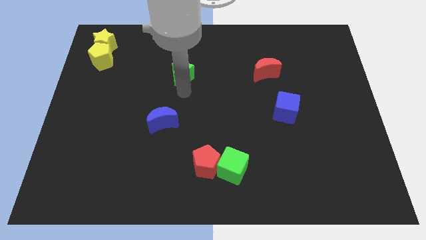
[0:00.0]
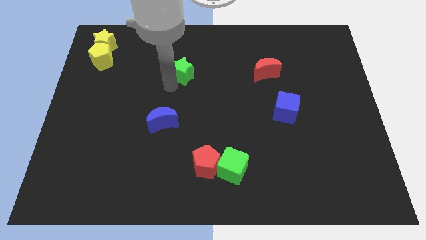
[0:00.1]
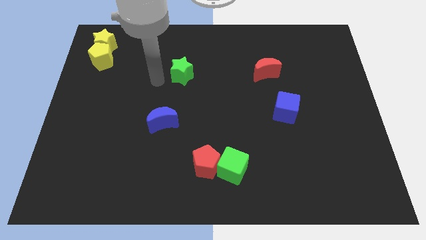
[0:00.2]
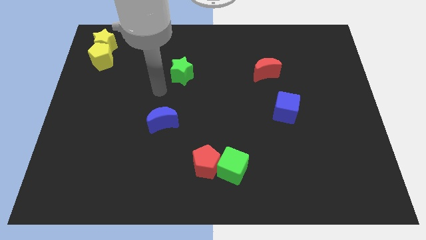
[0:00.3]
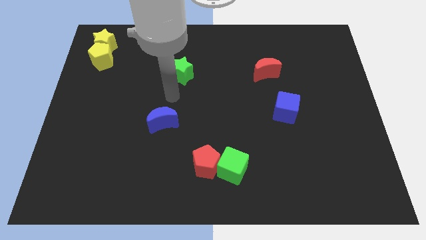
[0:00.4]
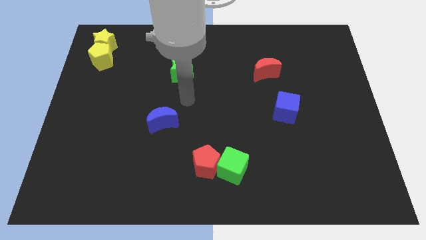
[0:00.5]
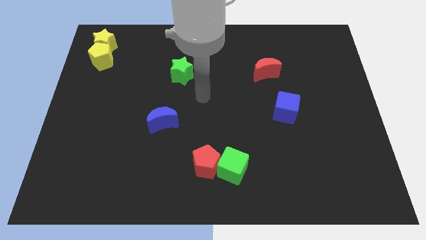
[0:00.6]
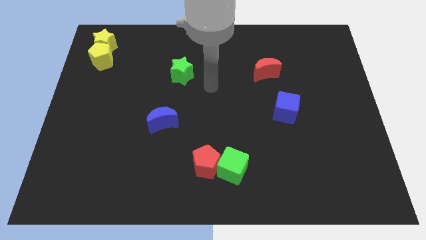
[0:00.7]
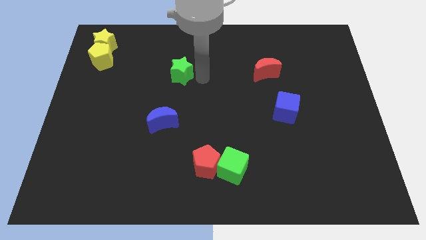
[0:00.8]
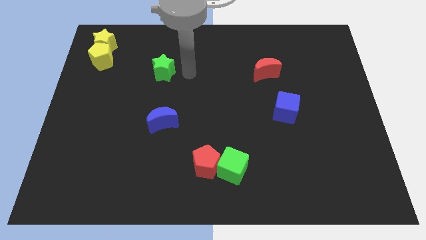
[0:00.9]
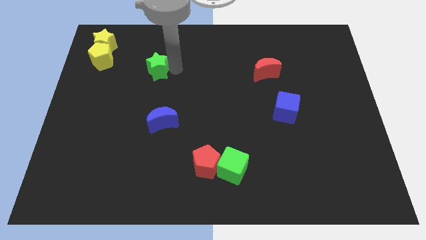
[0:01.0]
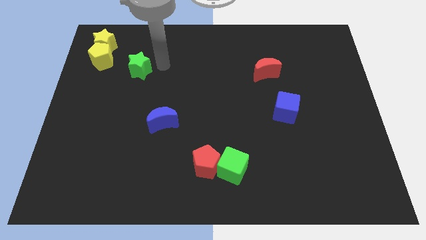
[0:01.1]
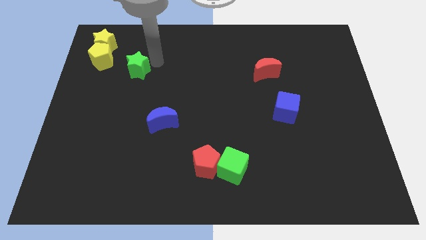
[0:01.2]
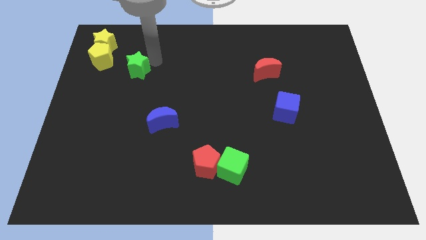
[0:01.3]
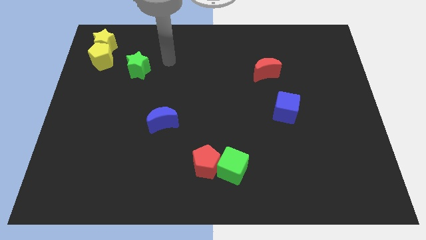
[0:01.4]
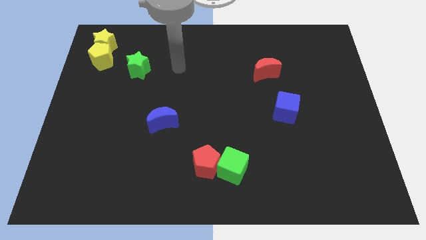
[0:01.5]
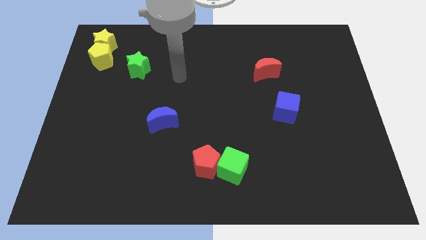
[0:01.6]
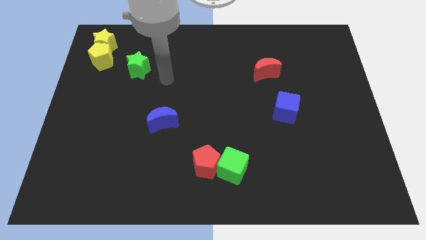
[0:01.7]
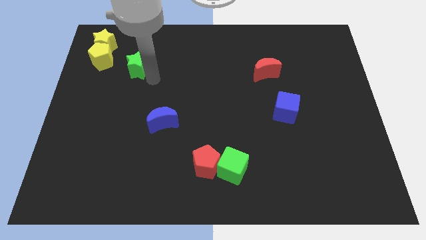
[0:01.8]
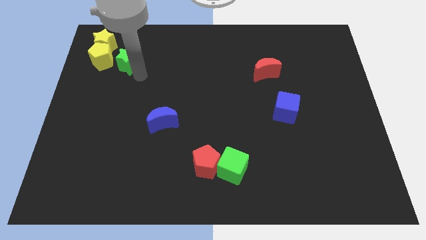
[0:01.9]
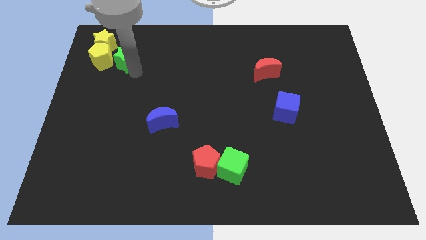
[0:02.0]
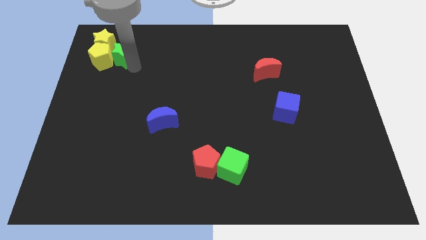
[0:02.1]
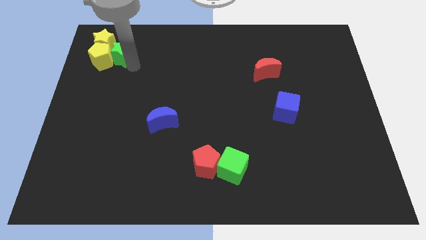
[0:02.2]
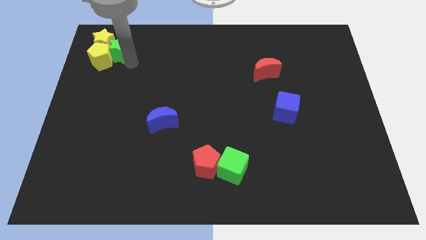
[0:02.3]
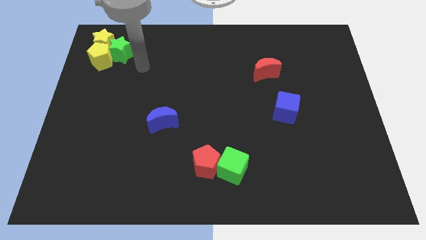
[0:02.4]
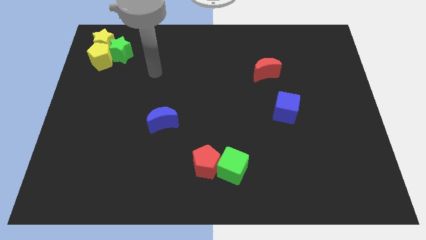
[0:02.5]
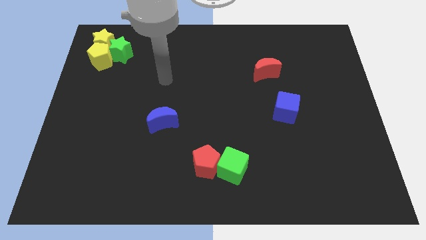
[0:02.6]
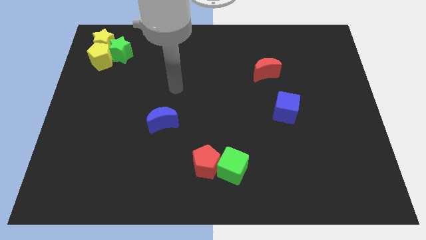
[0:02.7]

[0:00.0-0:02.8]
move the green star into the yellow blocks

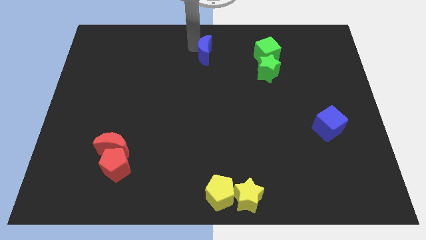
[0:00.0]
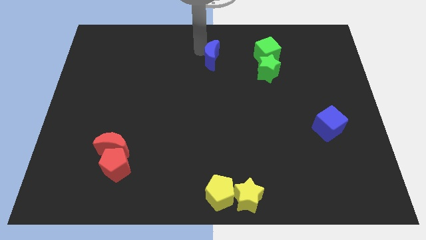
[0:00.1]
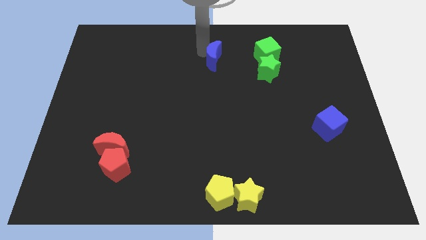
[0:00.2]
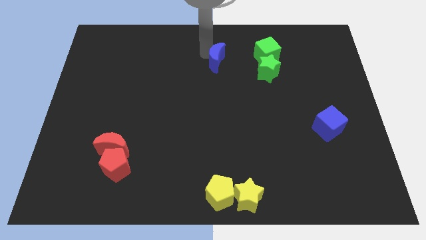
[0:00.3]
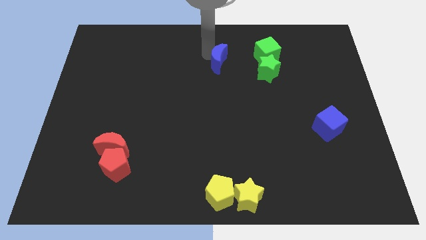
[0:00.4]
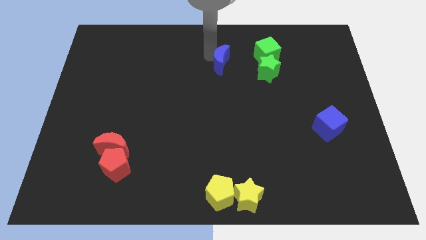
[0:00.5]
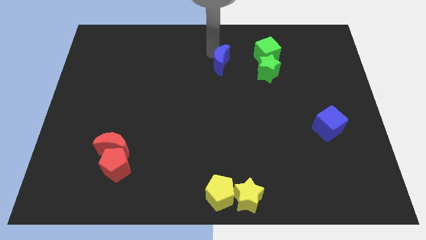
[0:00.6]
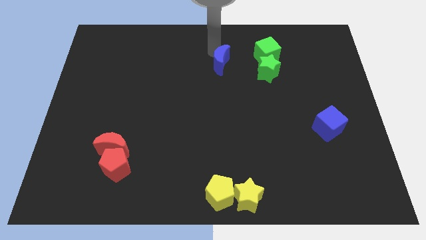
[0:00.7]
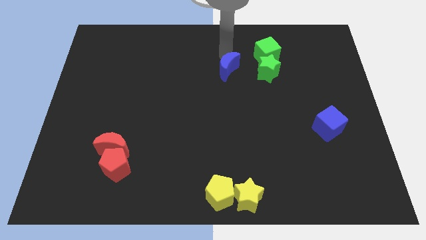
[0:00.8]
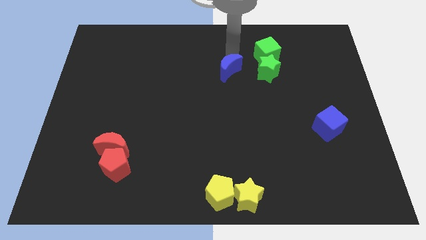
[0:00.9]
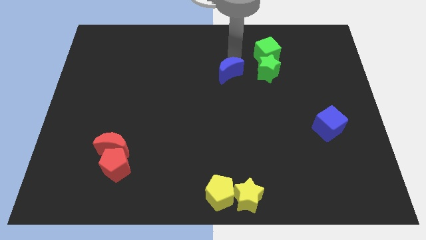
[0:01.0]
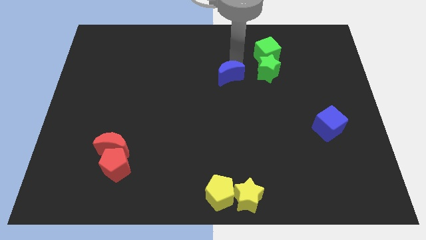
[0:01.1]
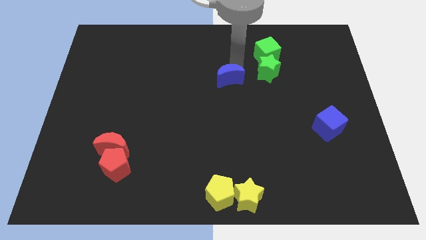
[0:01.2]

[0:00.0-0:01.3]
place blue moon to the left side of the green star

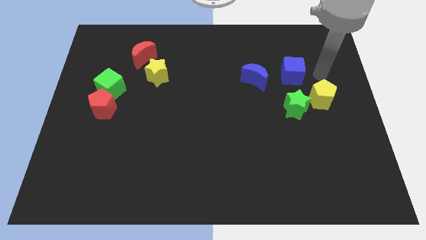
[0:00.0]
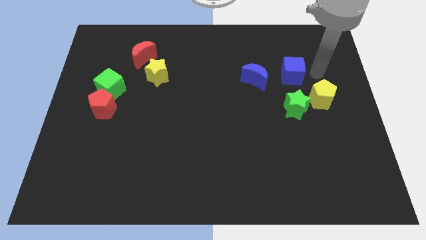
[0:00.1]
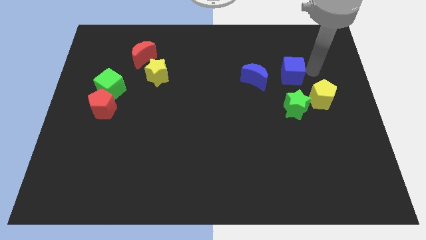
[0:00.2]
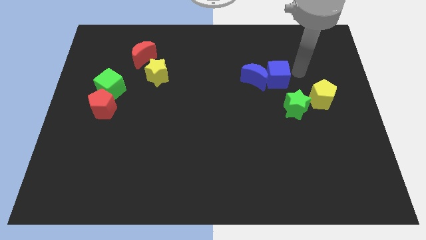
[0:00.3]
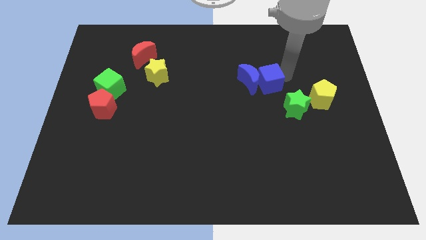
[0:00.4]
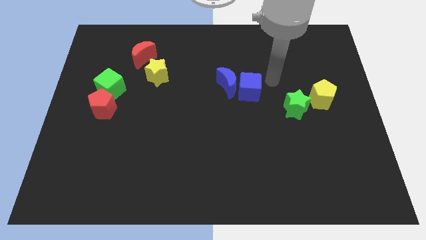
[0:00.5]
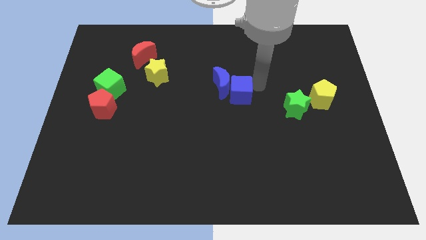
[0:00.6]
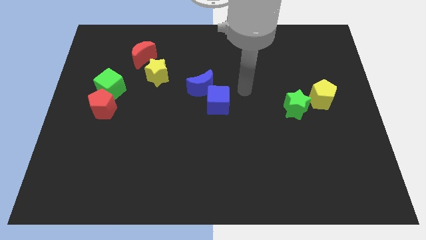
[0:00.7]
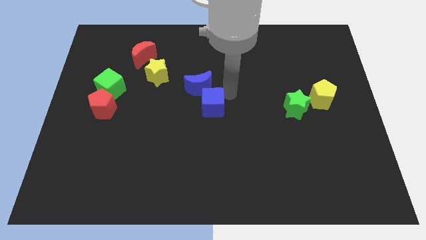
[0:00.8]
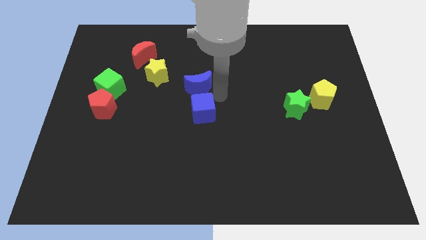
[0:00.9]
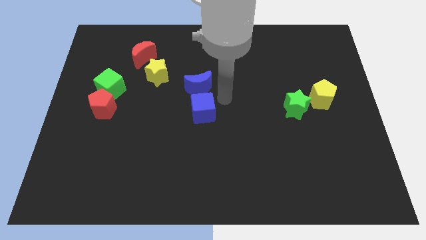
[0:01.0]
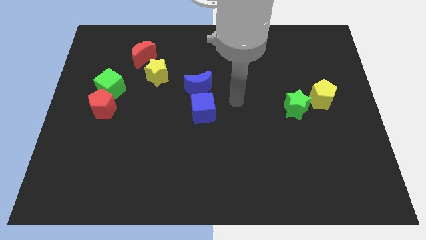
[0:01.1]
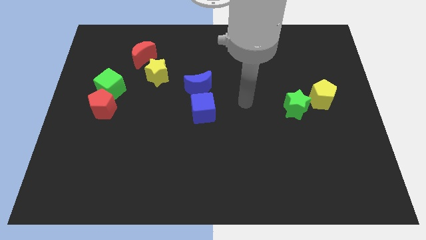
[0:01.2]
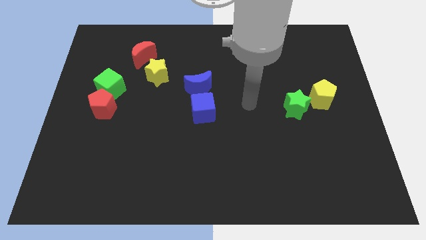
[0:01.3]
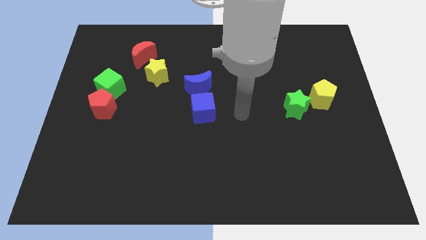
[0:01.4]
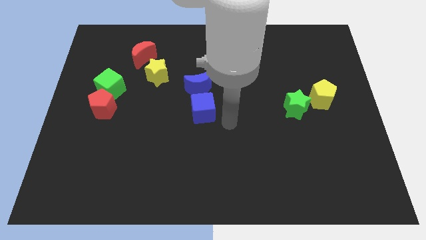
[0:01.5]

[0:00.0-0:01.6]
push the blue blocks to the left

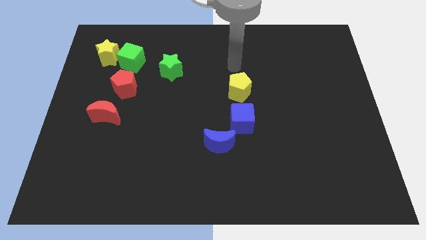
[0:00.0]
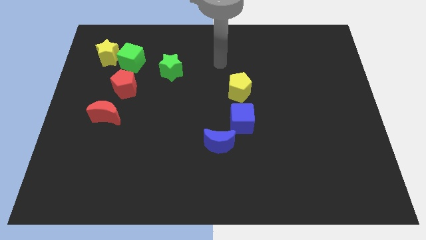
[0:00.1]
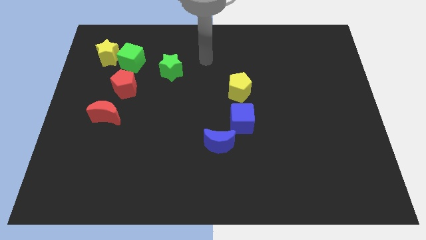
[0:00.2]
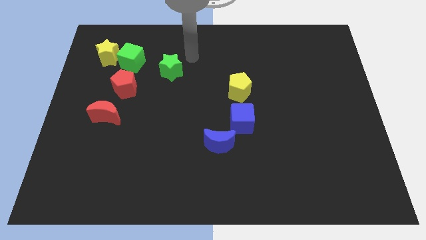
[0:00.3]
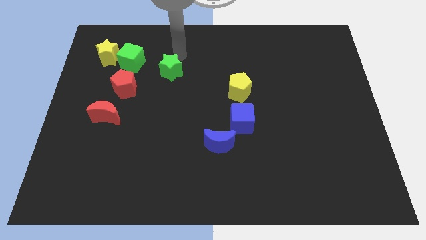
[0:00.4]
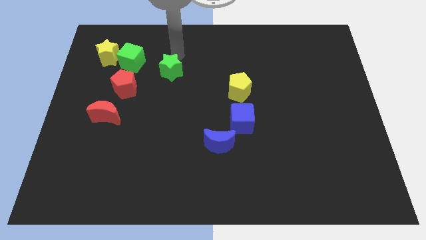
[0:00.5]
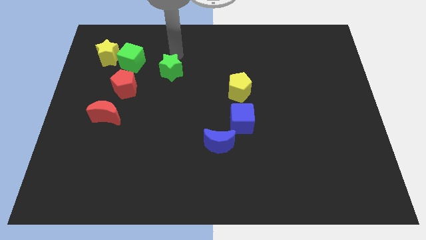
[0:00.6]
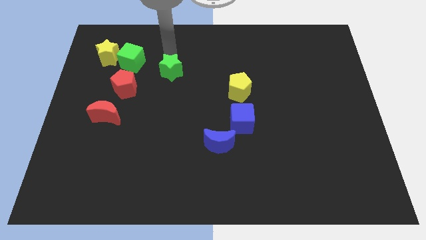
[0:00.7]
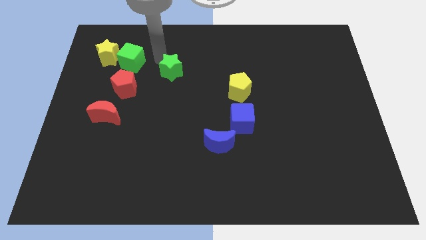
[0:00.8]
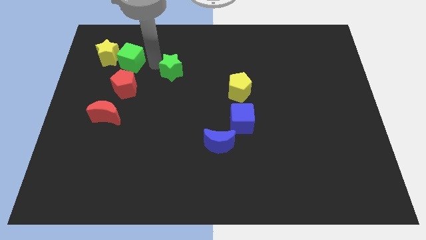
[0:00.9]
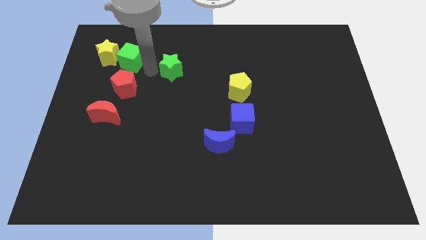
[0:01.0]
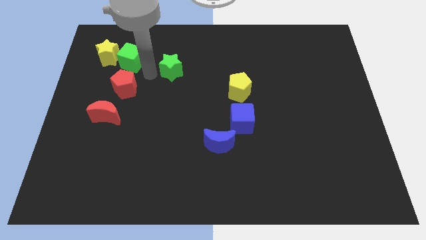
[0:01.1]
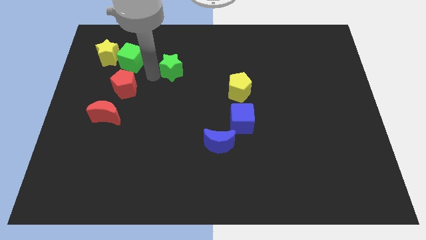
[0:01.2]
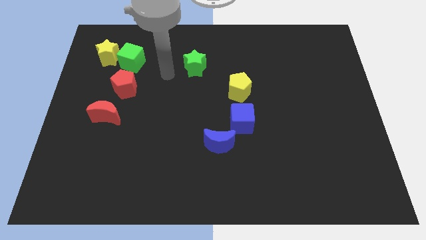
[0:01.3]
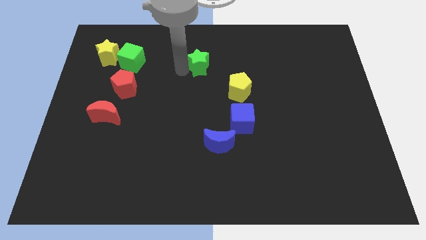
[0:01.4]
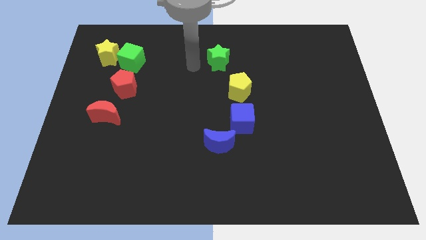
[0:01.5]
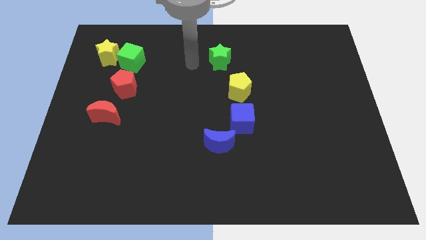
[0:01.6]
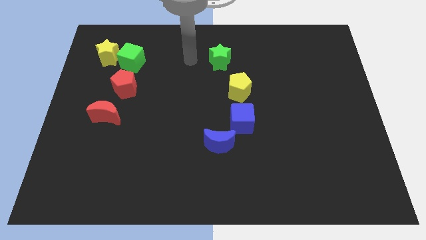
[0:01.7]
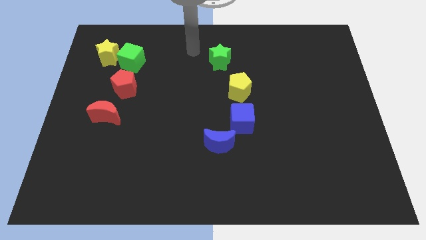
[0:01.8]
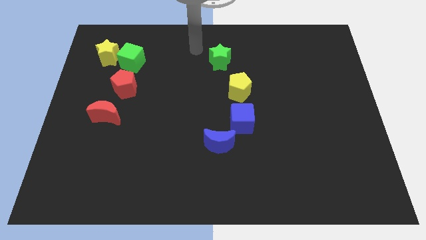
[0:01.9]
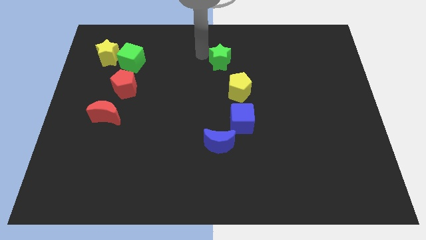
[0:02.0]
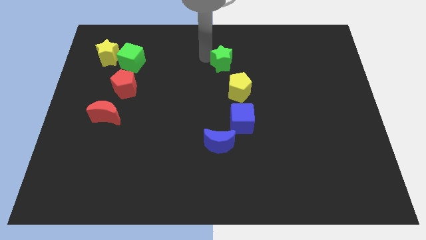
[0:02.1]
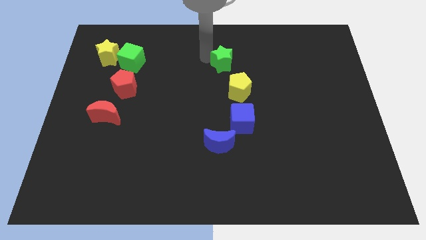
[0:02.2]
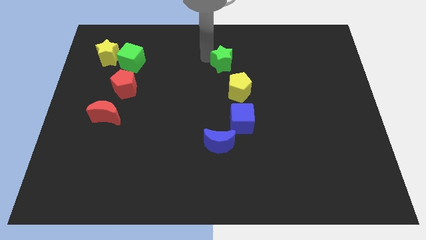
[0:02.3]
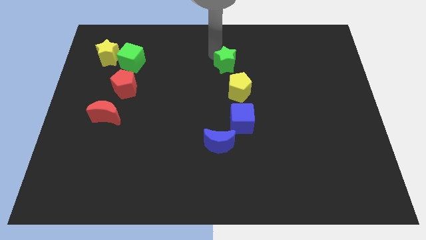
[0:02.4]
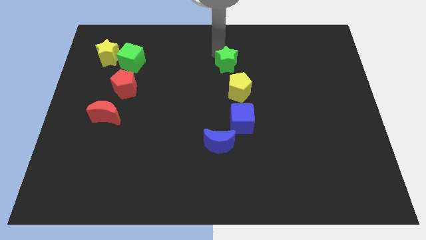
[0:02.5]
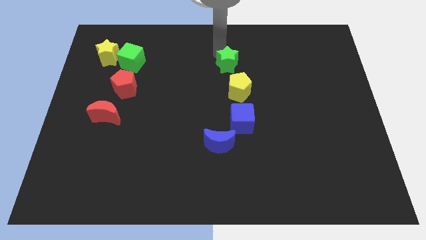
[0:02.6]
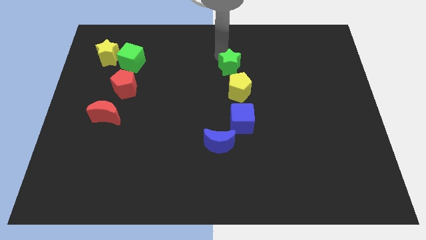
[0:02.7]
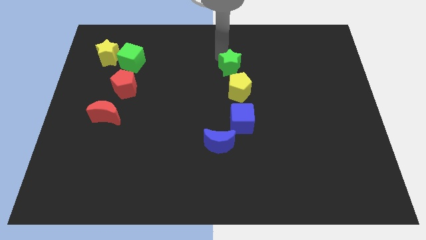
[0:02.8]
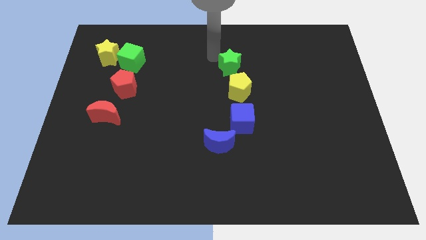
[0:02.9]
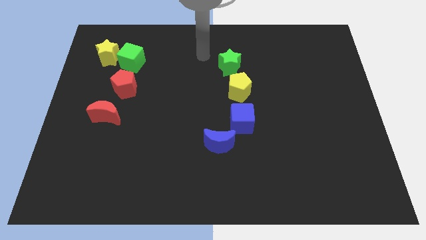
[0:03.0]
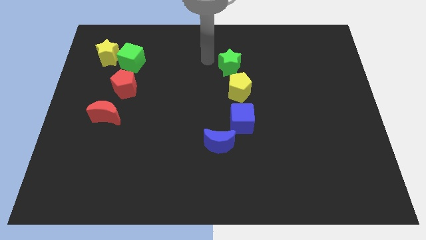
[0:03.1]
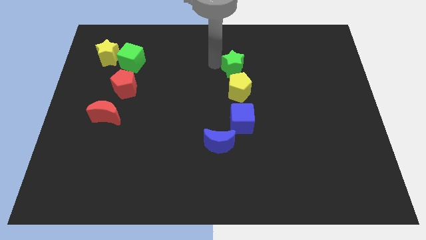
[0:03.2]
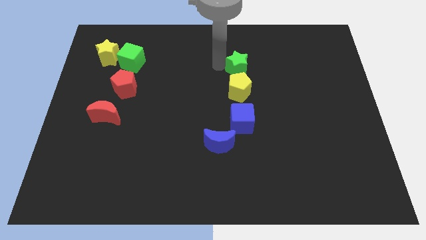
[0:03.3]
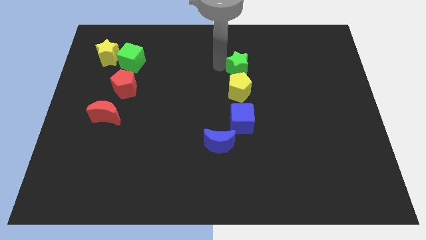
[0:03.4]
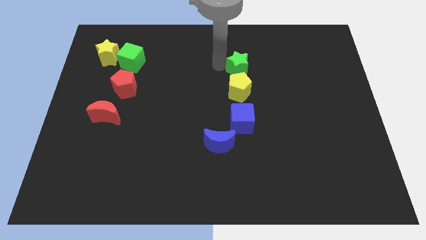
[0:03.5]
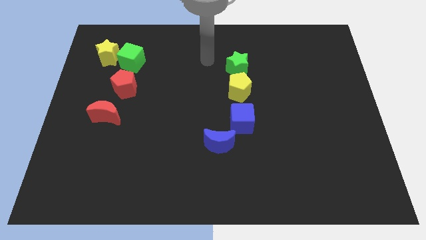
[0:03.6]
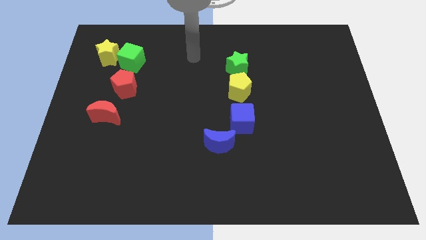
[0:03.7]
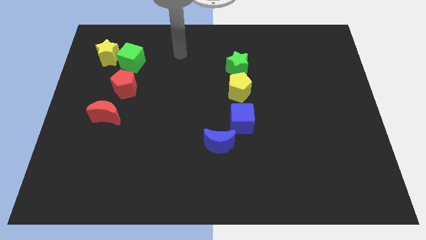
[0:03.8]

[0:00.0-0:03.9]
move the green star to the top of yellow pentagon
